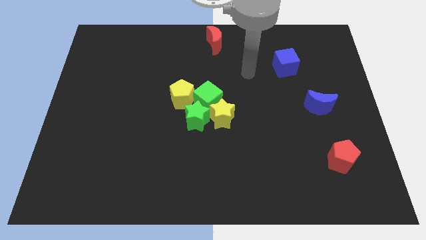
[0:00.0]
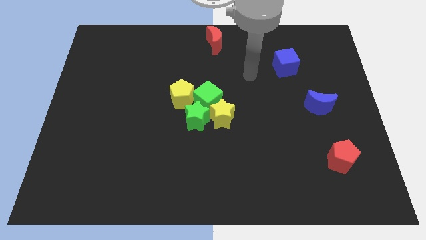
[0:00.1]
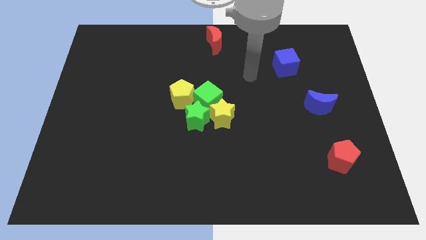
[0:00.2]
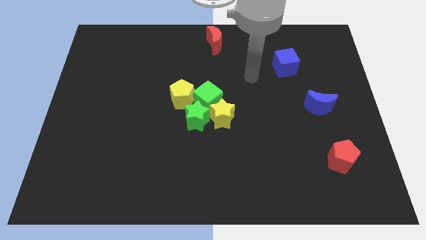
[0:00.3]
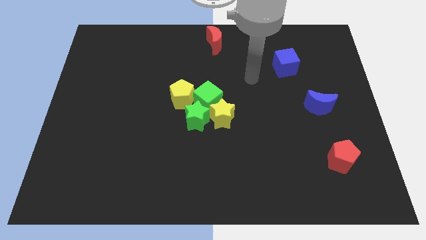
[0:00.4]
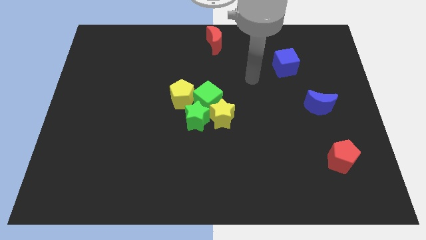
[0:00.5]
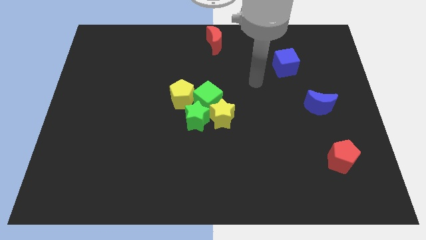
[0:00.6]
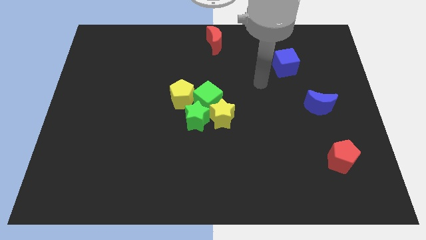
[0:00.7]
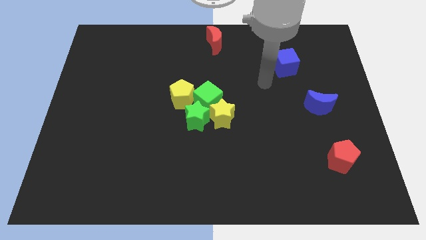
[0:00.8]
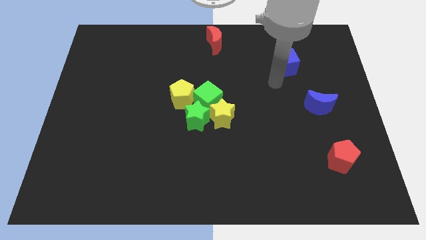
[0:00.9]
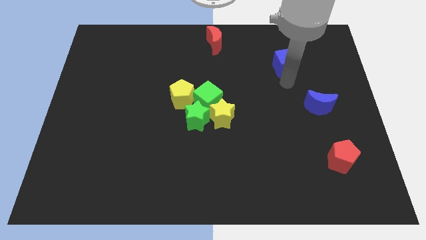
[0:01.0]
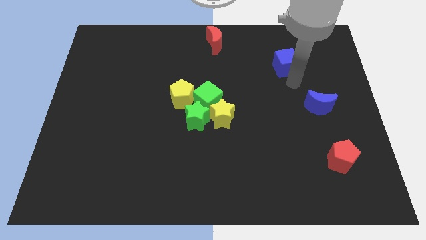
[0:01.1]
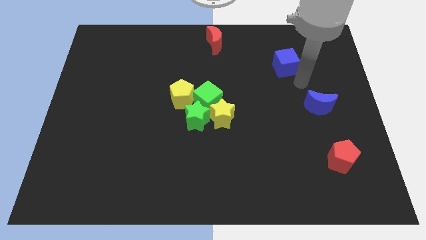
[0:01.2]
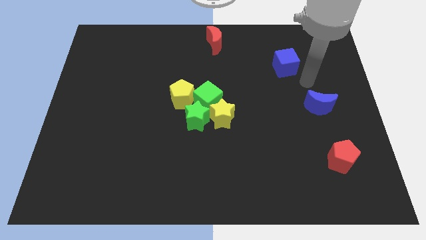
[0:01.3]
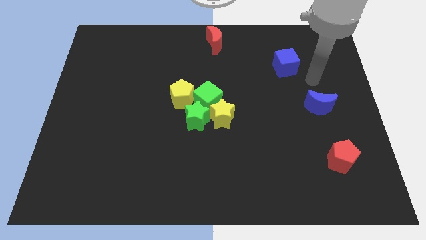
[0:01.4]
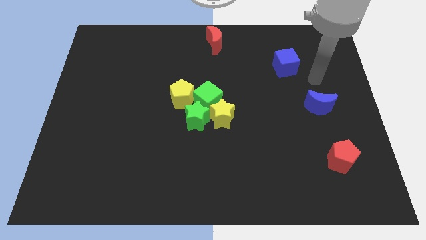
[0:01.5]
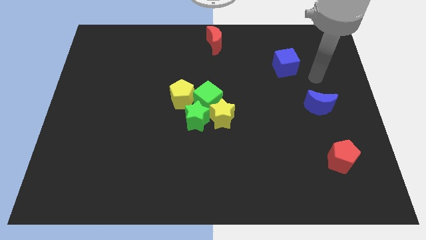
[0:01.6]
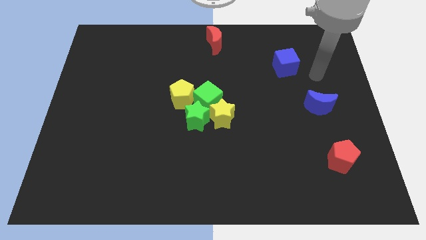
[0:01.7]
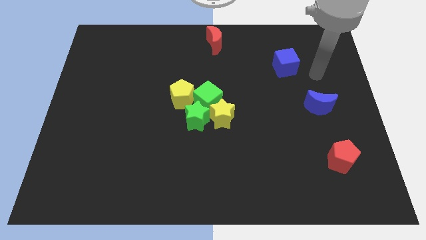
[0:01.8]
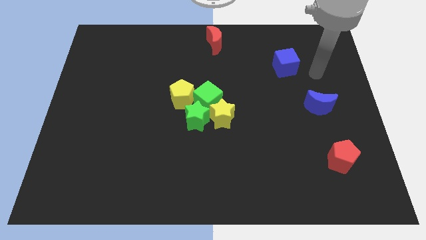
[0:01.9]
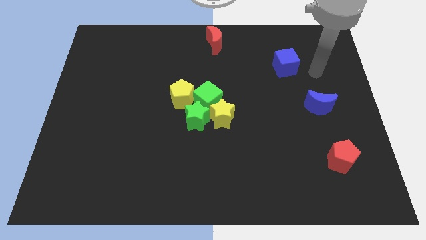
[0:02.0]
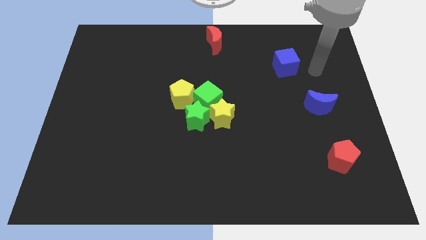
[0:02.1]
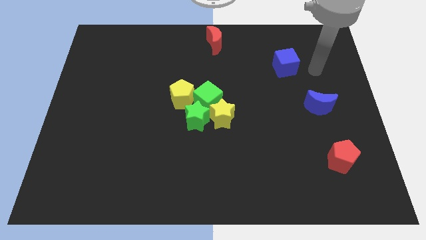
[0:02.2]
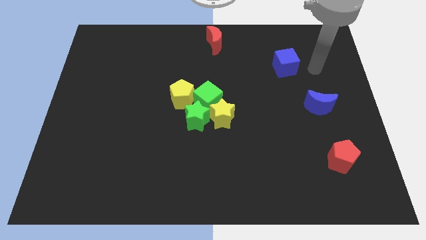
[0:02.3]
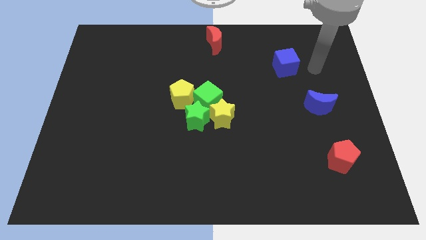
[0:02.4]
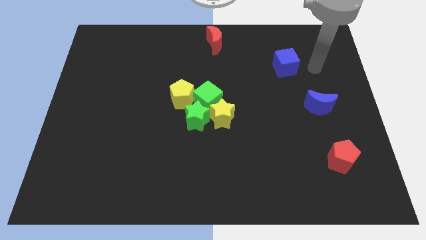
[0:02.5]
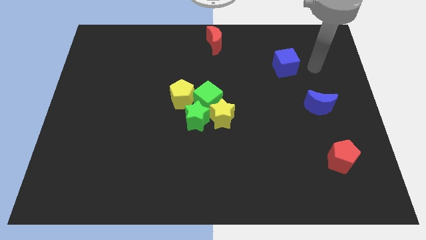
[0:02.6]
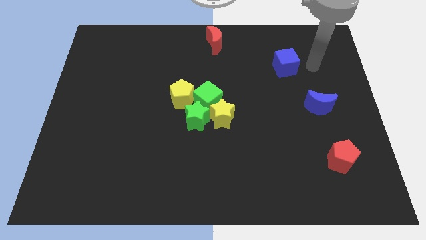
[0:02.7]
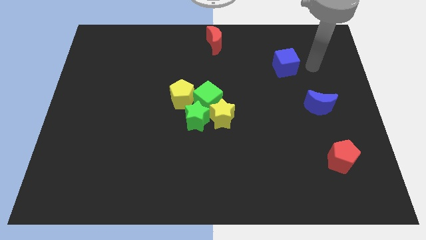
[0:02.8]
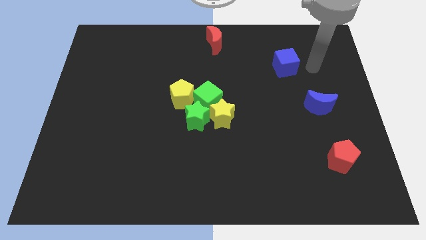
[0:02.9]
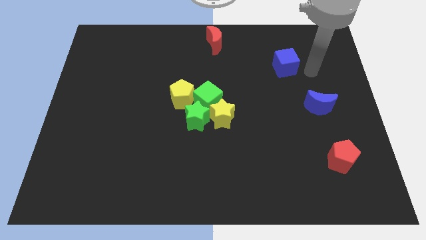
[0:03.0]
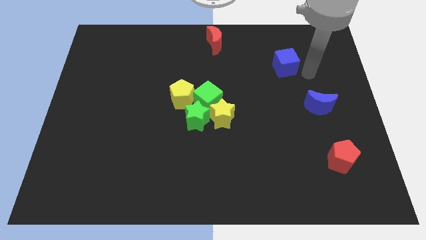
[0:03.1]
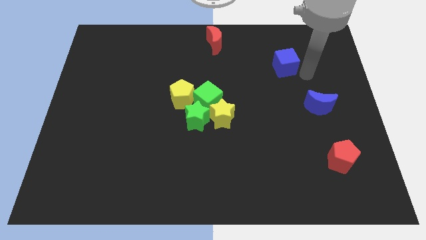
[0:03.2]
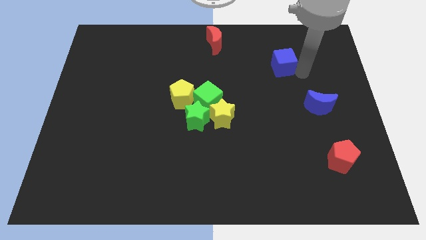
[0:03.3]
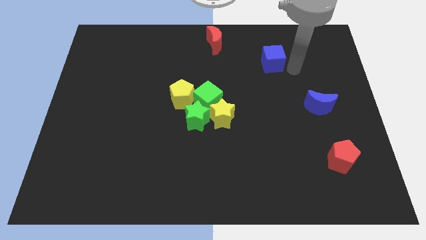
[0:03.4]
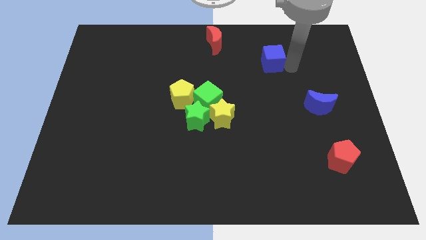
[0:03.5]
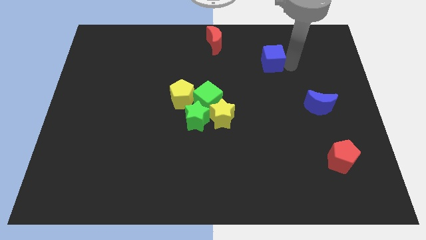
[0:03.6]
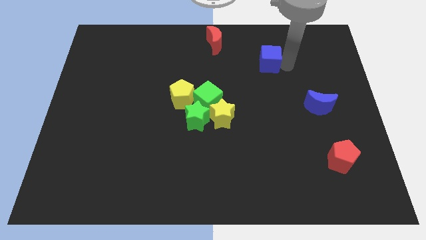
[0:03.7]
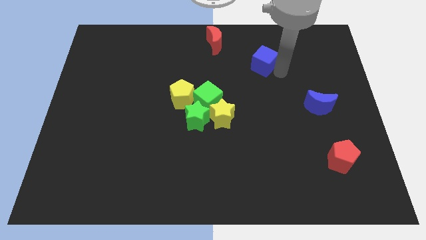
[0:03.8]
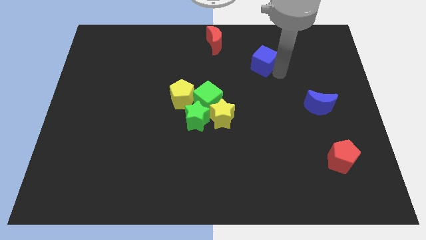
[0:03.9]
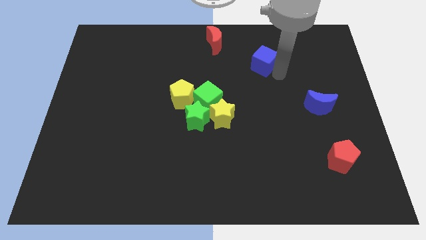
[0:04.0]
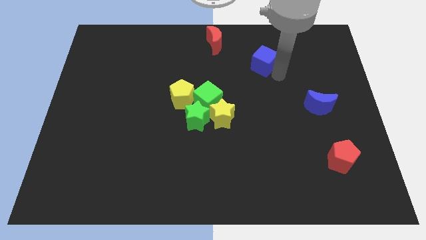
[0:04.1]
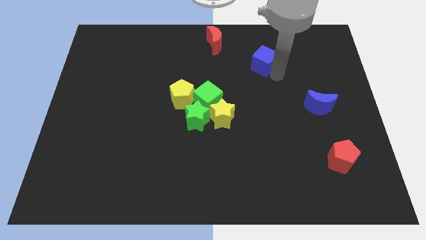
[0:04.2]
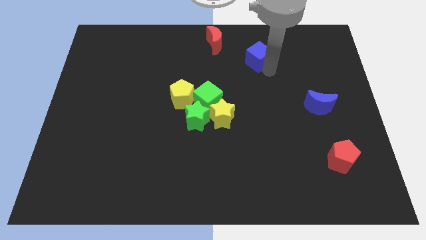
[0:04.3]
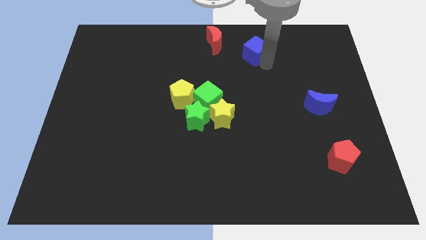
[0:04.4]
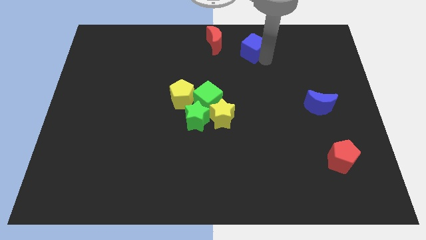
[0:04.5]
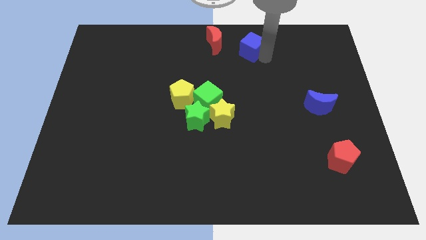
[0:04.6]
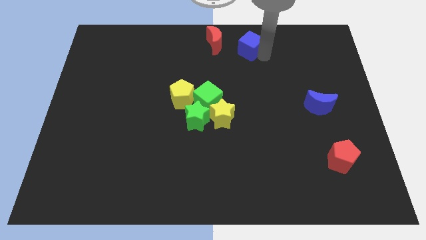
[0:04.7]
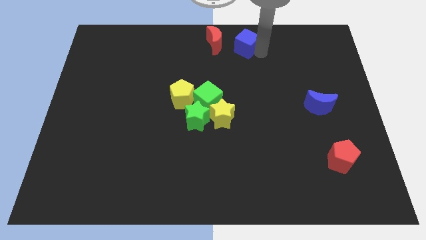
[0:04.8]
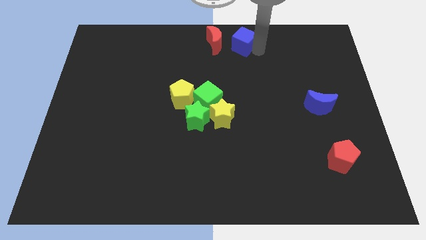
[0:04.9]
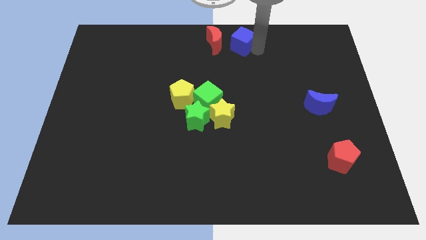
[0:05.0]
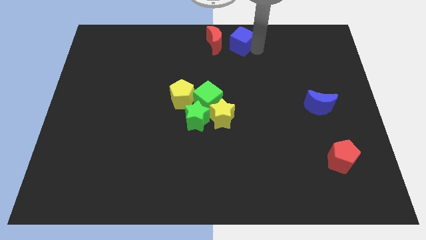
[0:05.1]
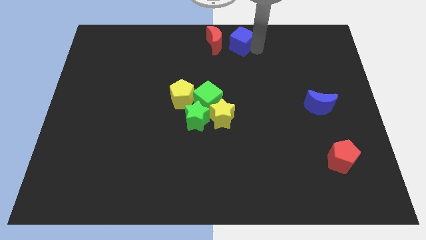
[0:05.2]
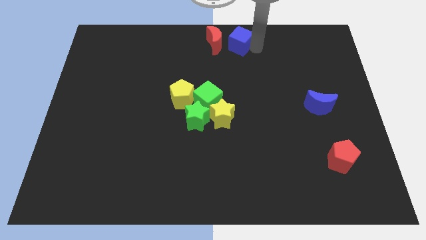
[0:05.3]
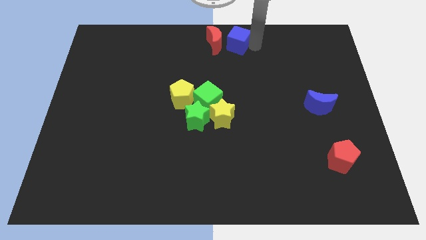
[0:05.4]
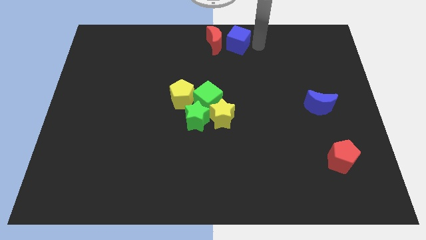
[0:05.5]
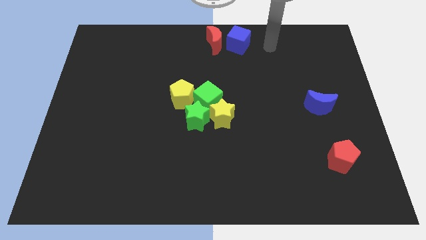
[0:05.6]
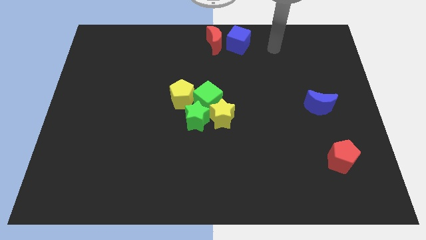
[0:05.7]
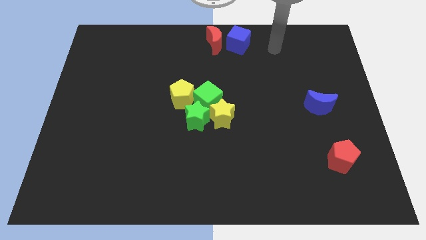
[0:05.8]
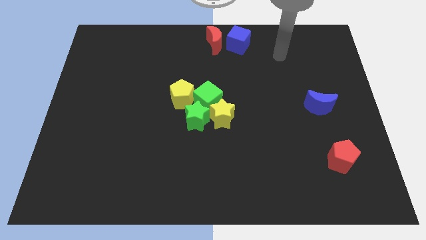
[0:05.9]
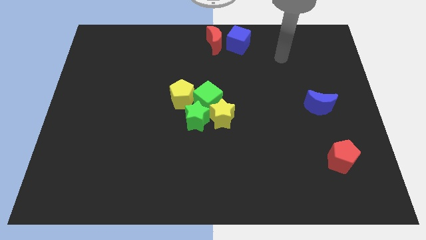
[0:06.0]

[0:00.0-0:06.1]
place the blue cube right to the red crescent

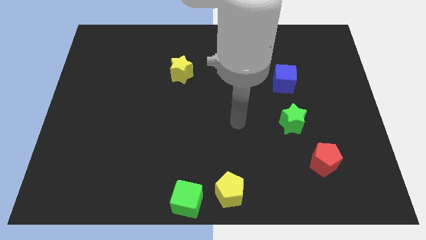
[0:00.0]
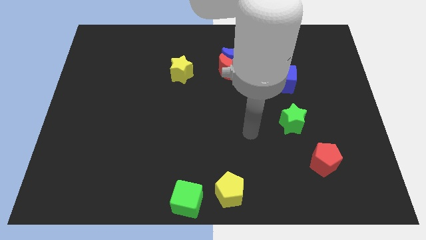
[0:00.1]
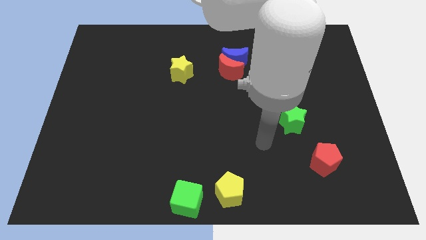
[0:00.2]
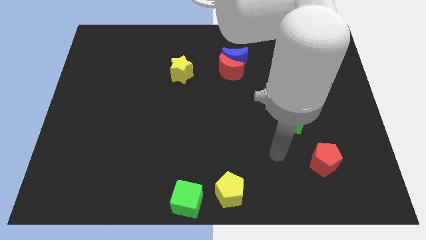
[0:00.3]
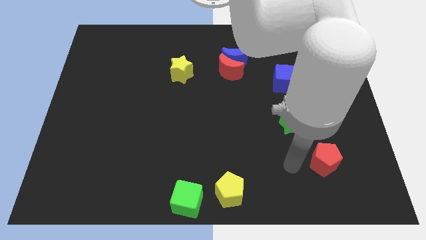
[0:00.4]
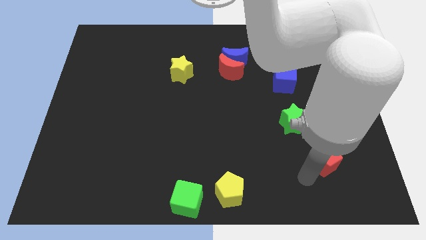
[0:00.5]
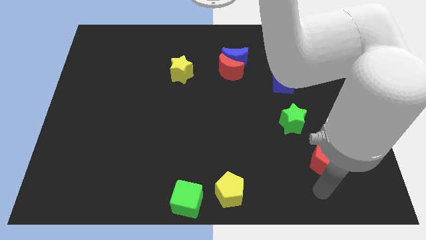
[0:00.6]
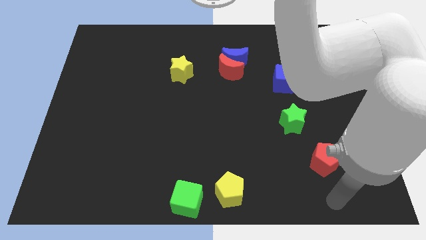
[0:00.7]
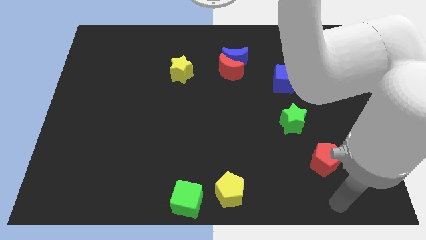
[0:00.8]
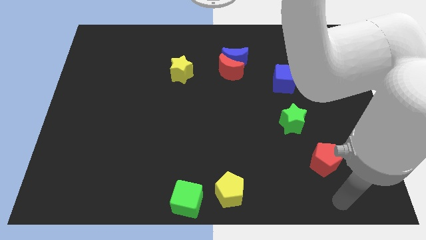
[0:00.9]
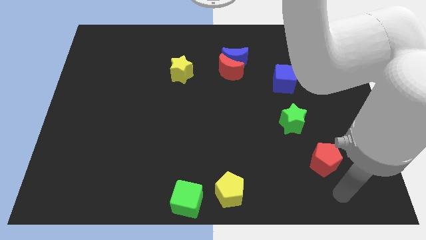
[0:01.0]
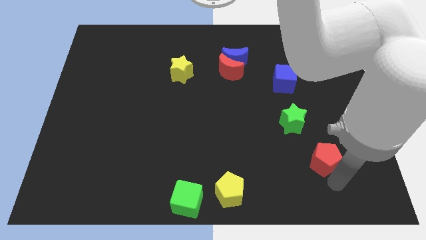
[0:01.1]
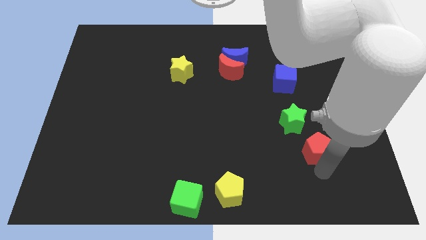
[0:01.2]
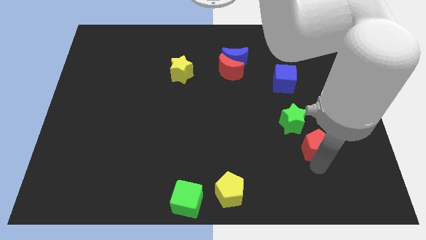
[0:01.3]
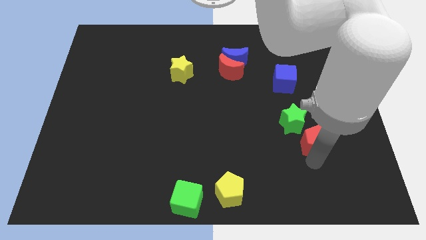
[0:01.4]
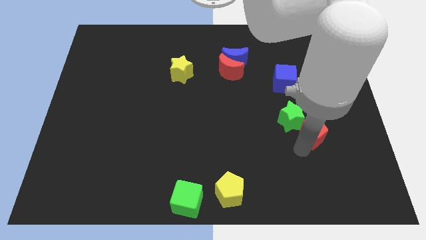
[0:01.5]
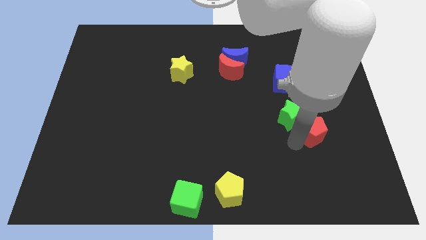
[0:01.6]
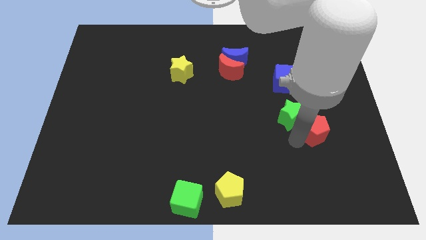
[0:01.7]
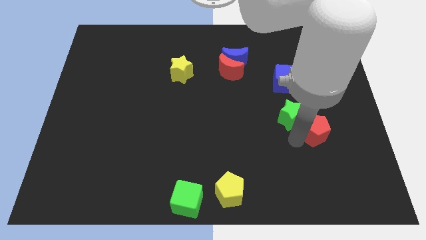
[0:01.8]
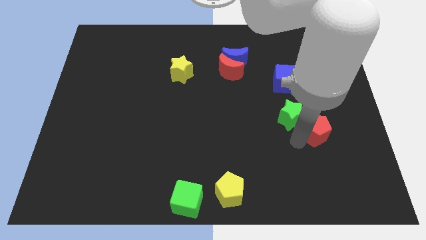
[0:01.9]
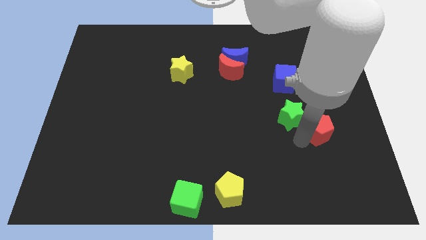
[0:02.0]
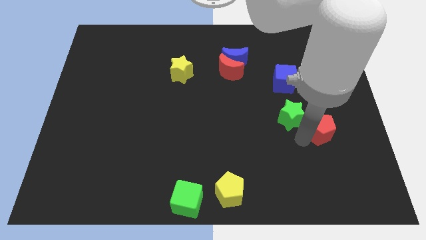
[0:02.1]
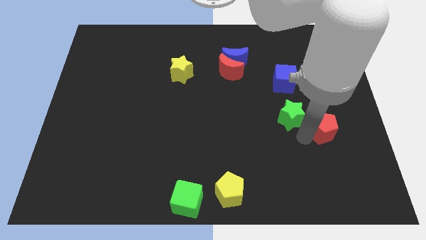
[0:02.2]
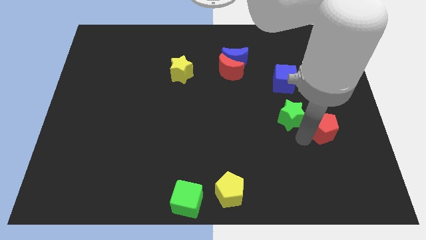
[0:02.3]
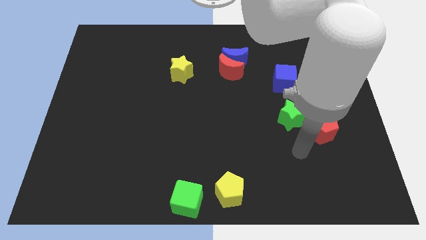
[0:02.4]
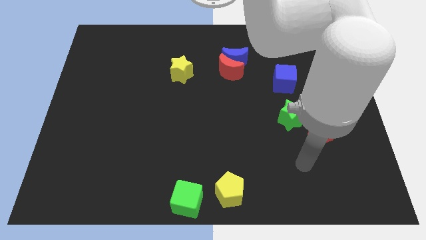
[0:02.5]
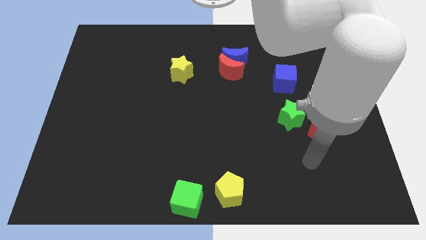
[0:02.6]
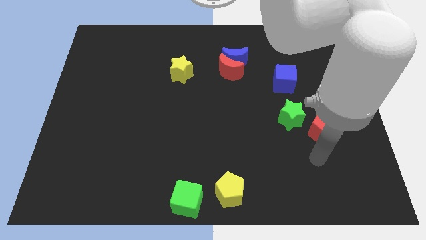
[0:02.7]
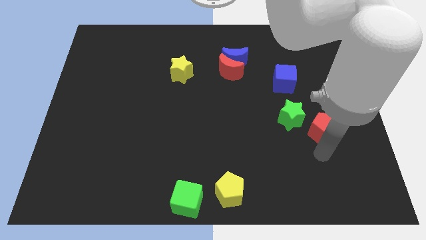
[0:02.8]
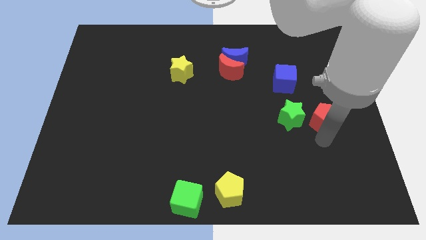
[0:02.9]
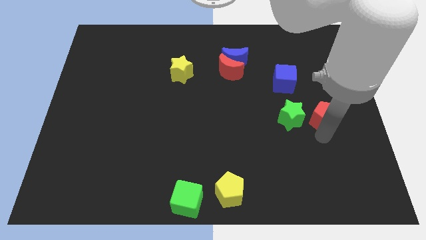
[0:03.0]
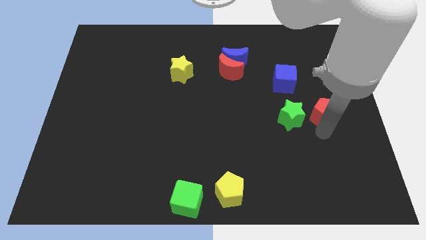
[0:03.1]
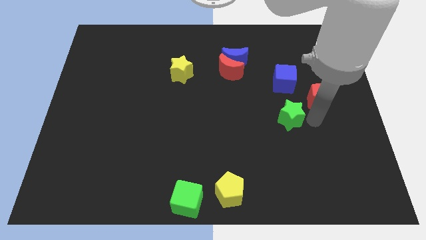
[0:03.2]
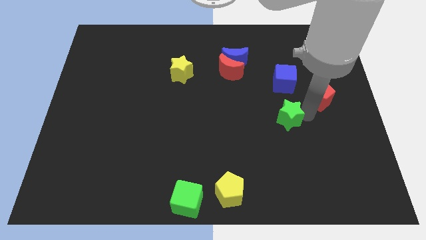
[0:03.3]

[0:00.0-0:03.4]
push the red pentagon into the green star
